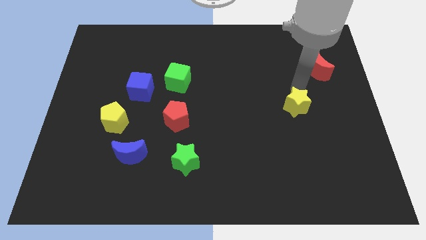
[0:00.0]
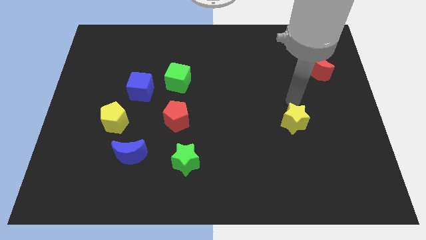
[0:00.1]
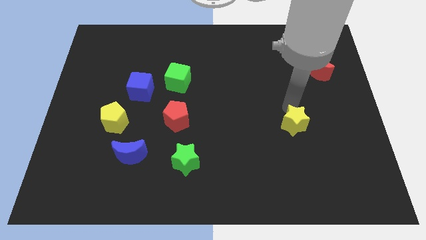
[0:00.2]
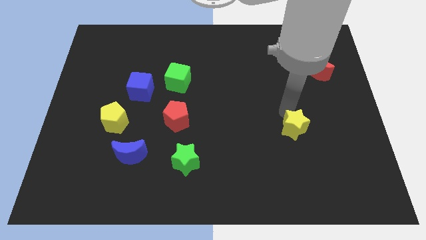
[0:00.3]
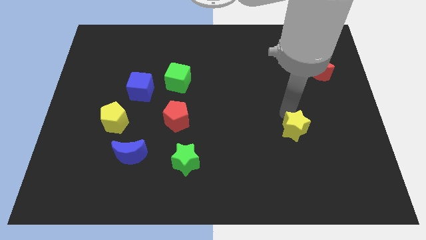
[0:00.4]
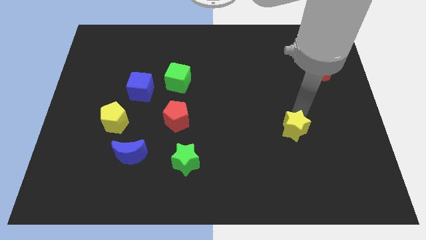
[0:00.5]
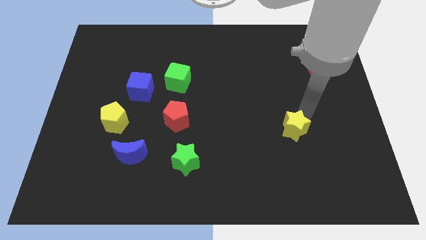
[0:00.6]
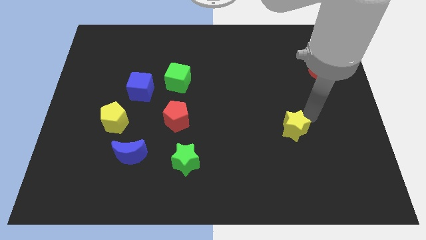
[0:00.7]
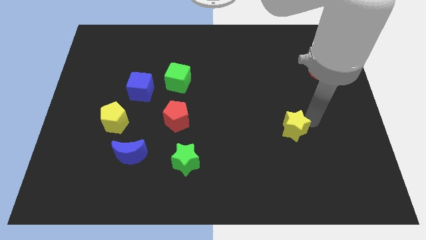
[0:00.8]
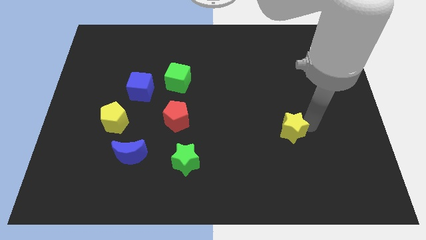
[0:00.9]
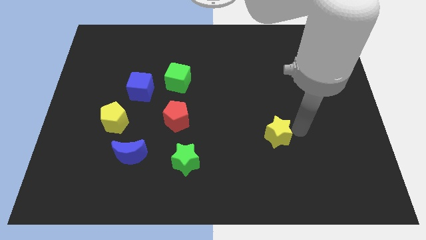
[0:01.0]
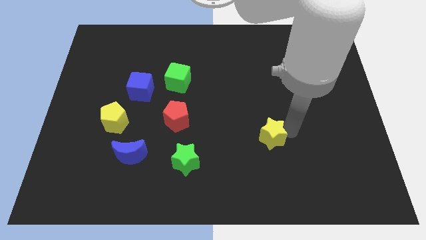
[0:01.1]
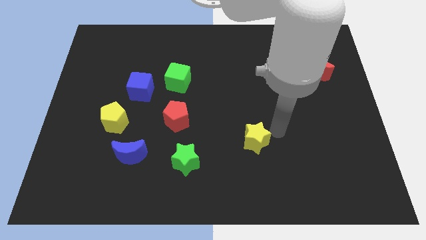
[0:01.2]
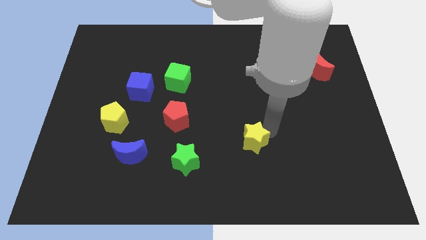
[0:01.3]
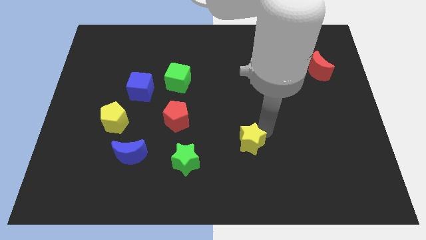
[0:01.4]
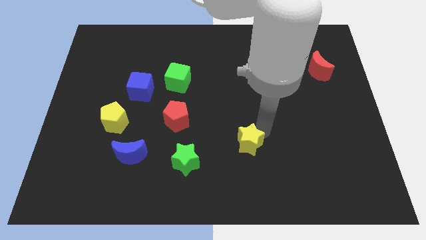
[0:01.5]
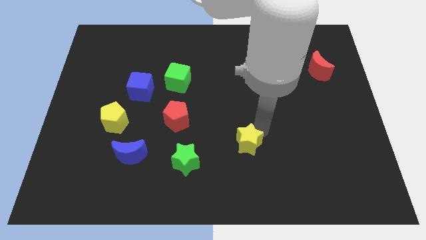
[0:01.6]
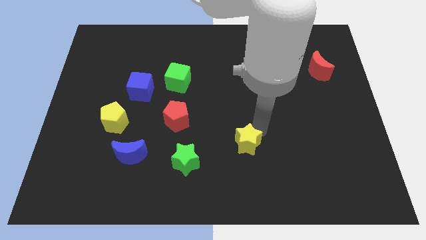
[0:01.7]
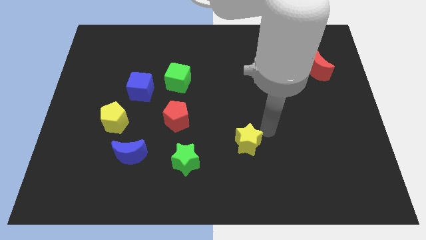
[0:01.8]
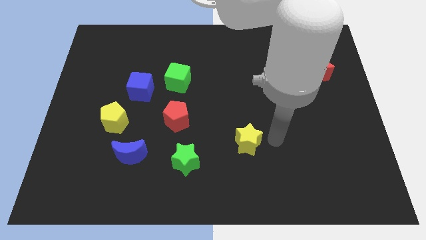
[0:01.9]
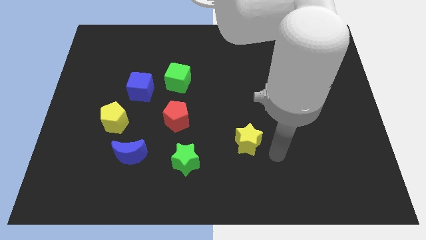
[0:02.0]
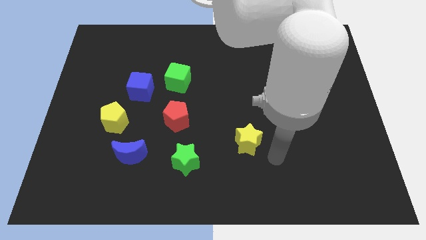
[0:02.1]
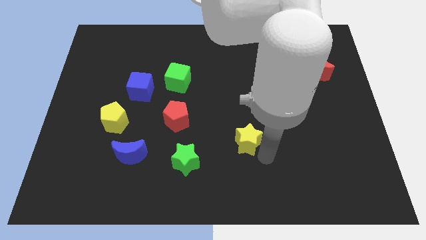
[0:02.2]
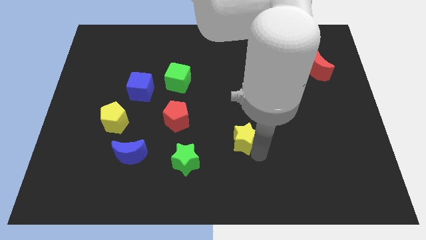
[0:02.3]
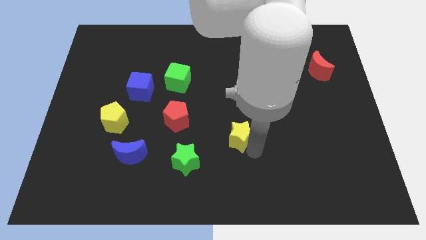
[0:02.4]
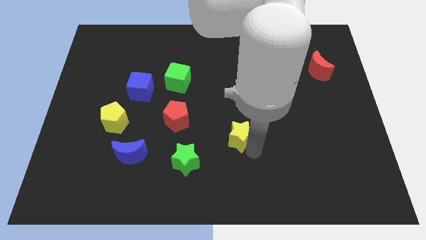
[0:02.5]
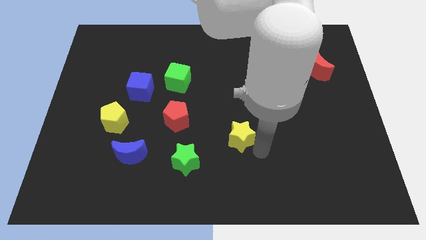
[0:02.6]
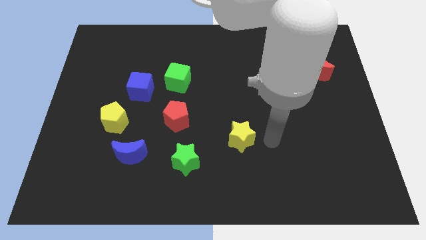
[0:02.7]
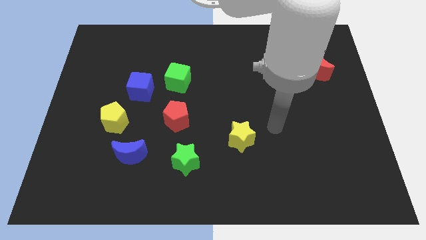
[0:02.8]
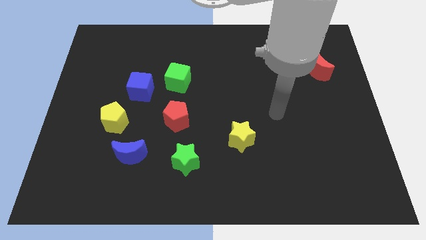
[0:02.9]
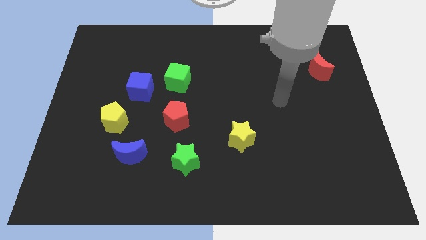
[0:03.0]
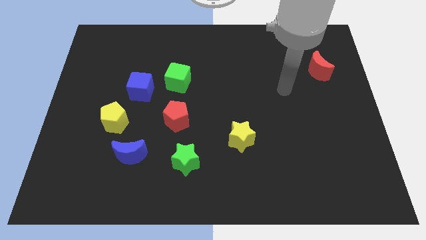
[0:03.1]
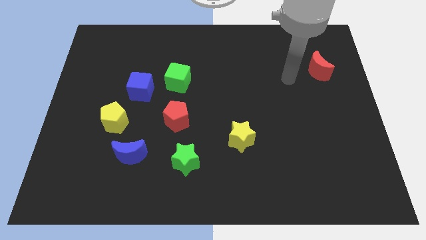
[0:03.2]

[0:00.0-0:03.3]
drag the yellow star towards the green star

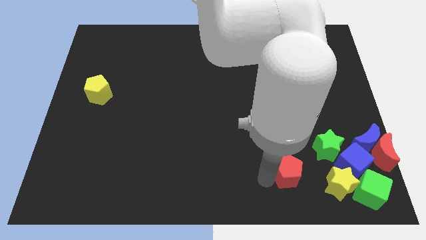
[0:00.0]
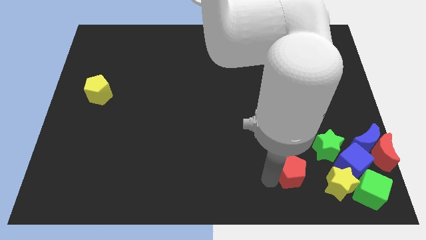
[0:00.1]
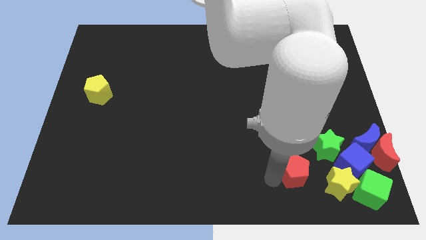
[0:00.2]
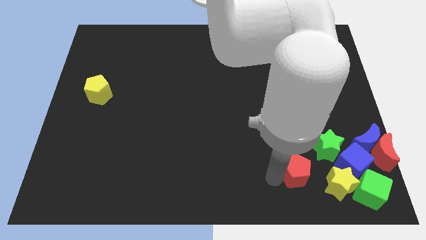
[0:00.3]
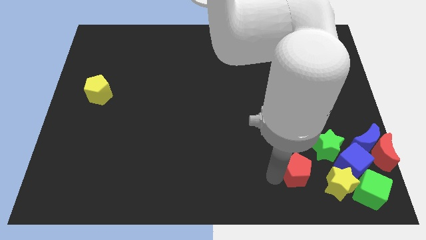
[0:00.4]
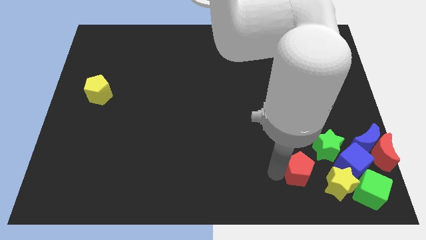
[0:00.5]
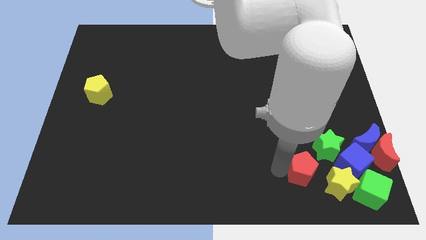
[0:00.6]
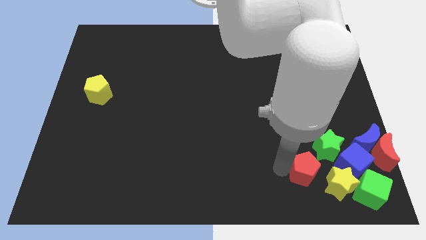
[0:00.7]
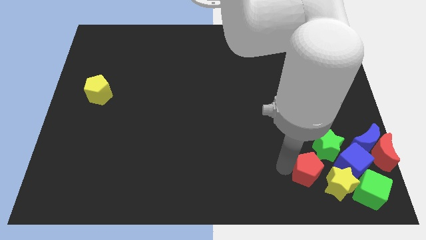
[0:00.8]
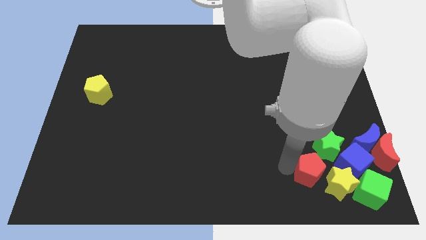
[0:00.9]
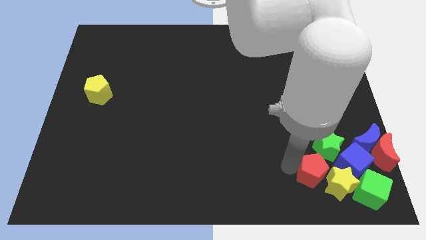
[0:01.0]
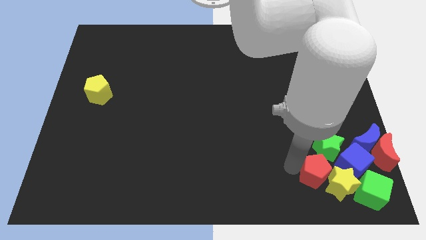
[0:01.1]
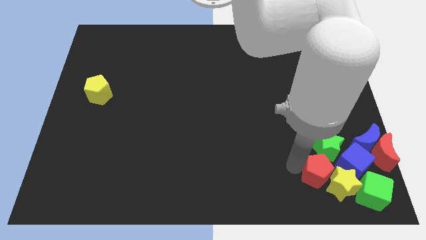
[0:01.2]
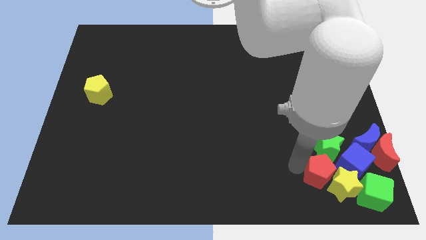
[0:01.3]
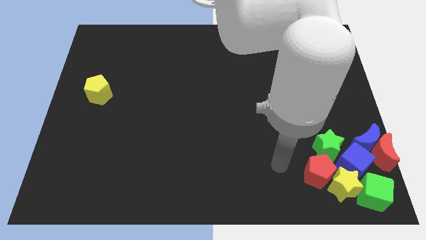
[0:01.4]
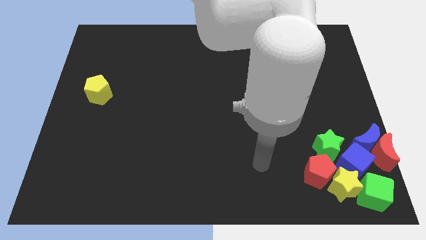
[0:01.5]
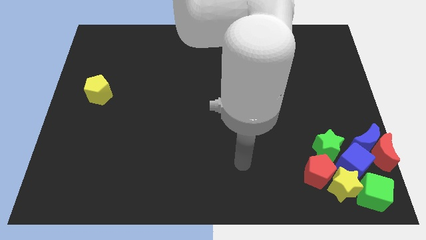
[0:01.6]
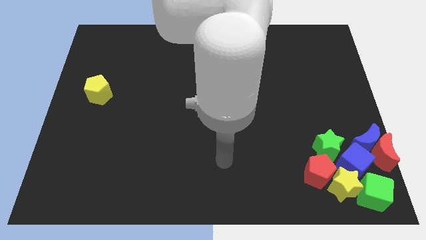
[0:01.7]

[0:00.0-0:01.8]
push the red pentagon into the yellow star

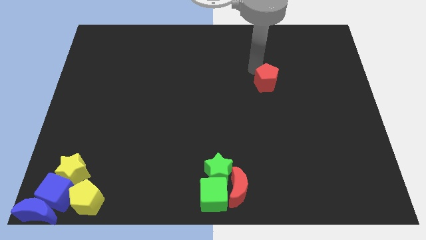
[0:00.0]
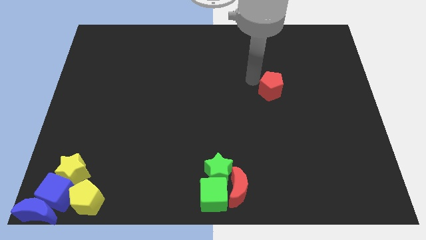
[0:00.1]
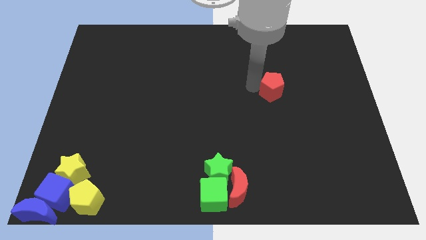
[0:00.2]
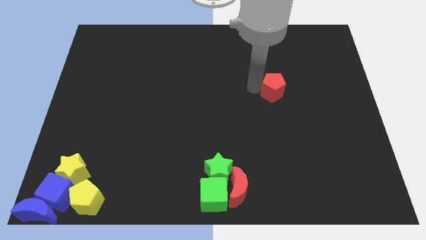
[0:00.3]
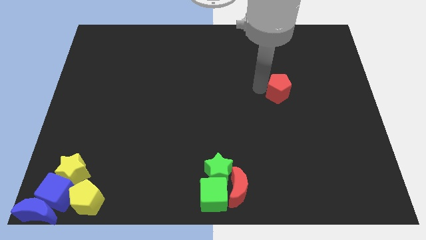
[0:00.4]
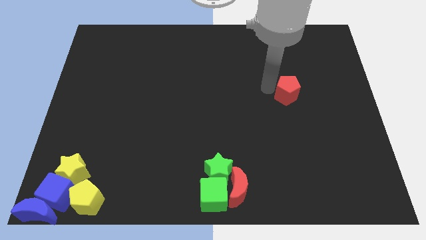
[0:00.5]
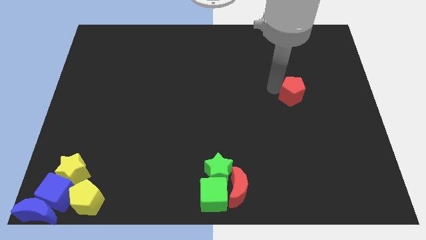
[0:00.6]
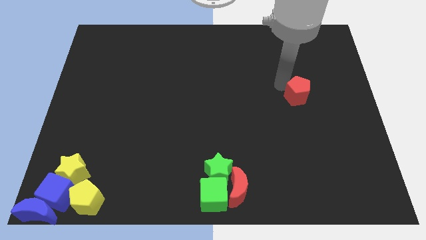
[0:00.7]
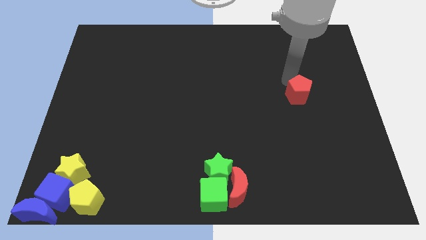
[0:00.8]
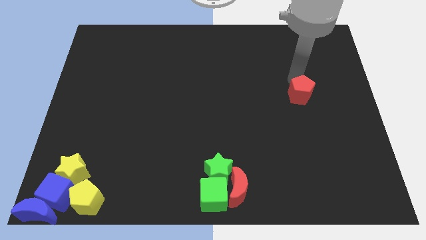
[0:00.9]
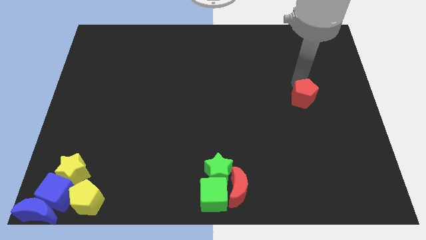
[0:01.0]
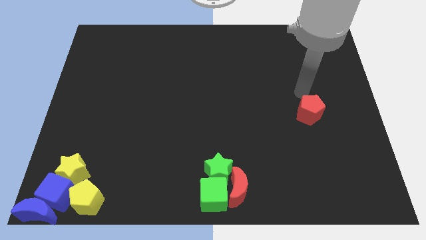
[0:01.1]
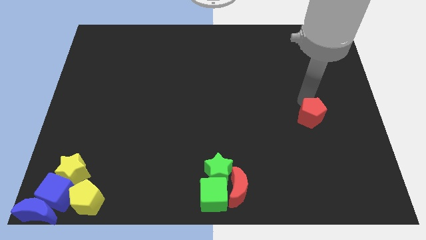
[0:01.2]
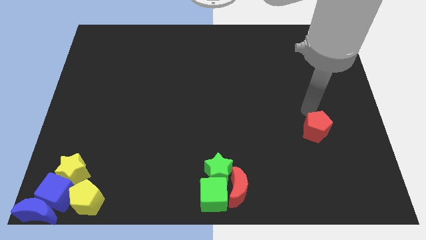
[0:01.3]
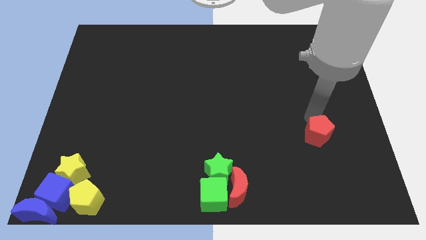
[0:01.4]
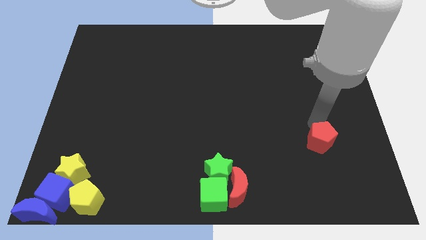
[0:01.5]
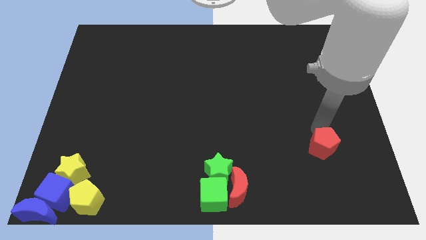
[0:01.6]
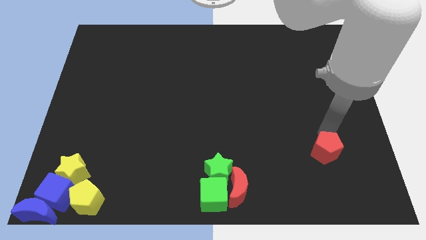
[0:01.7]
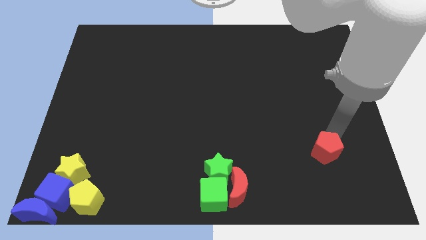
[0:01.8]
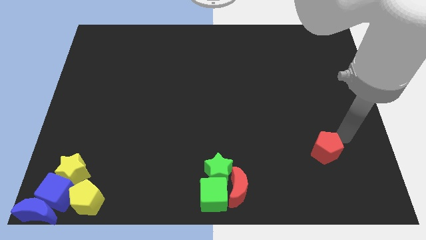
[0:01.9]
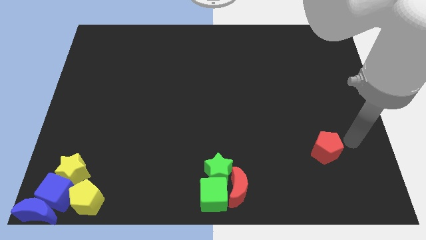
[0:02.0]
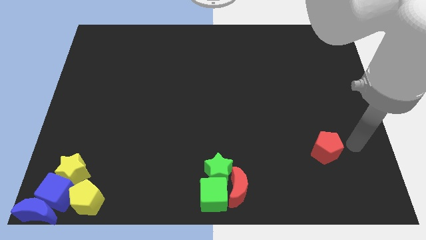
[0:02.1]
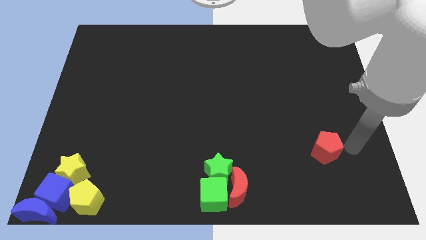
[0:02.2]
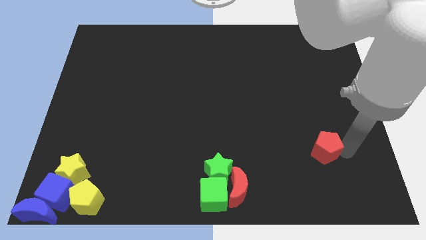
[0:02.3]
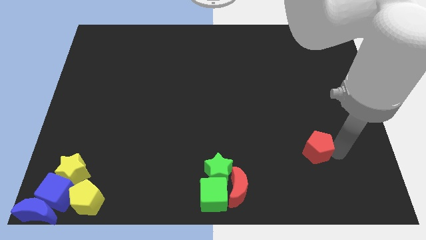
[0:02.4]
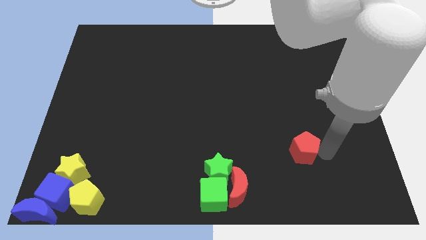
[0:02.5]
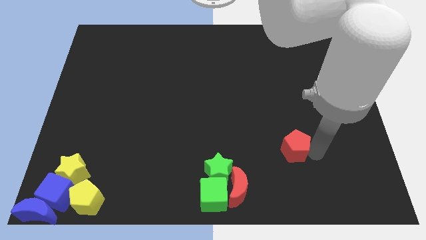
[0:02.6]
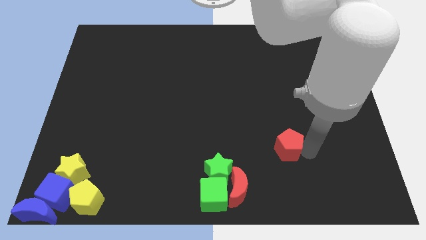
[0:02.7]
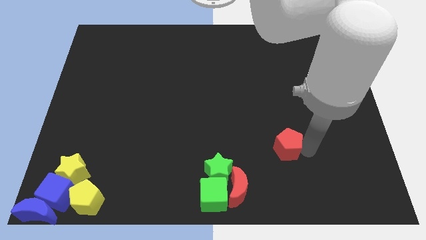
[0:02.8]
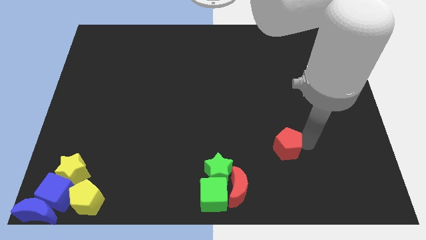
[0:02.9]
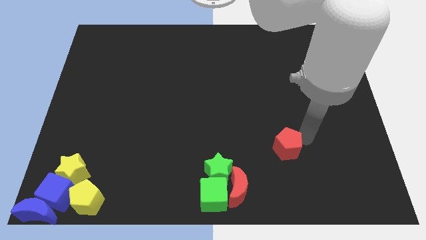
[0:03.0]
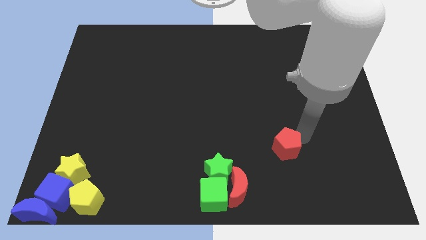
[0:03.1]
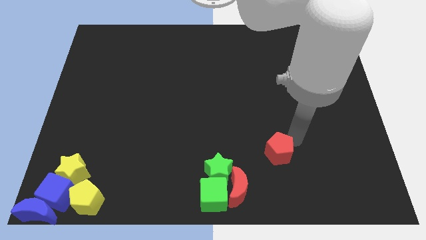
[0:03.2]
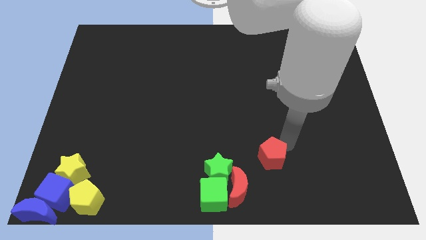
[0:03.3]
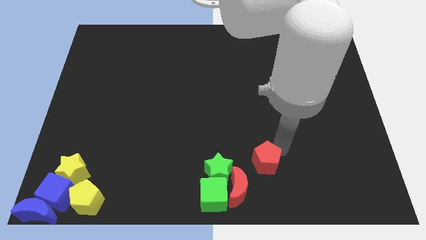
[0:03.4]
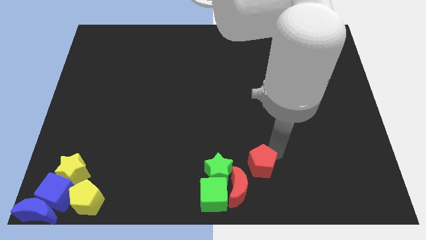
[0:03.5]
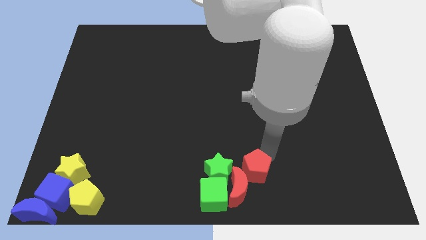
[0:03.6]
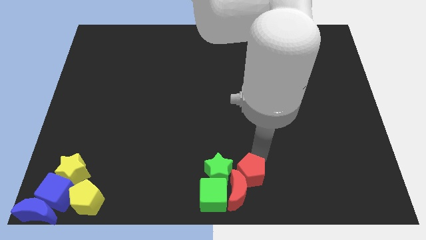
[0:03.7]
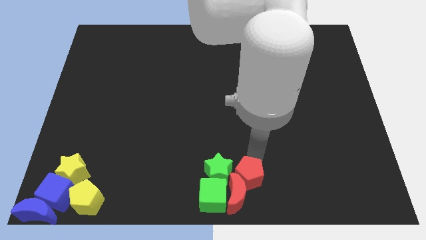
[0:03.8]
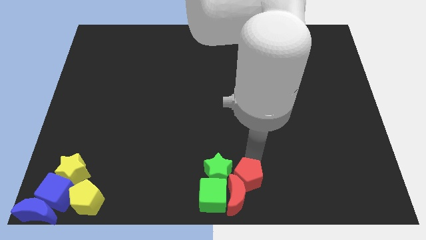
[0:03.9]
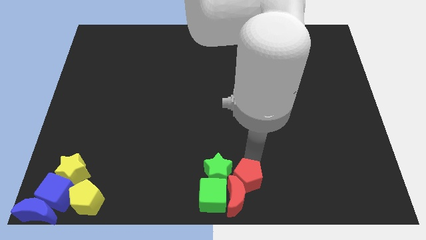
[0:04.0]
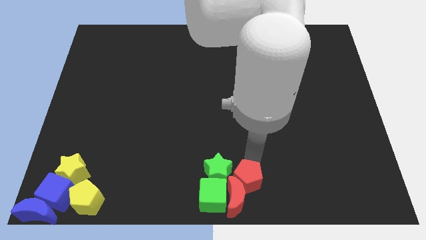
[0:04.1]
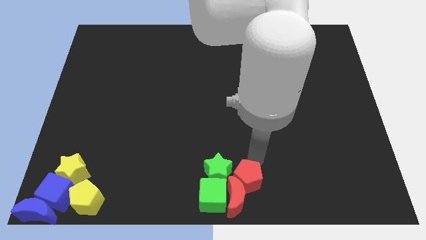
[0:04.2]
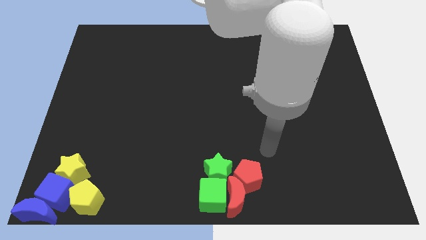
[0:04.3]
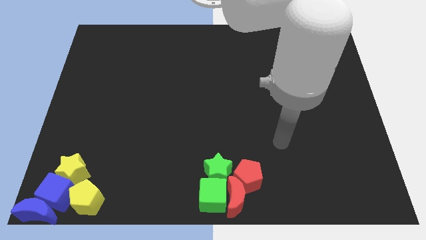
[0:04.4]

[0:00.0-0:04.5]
move the red pentagon to the top of the red moon
